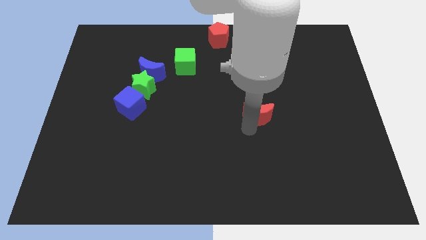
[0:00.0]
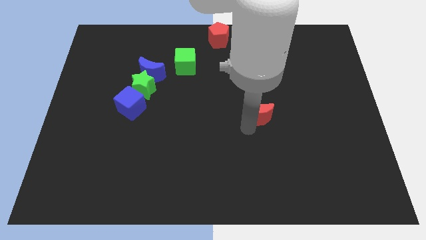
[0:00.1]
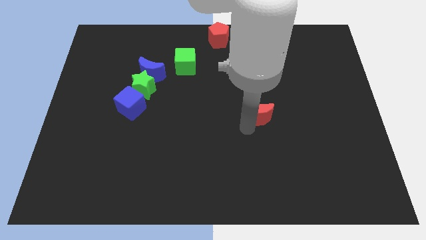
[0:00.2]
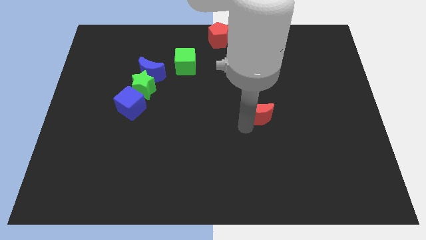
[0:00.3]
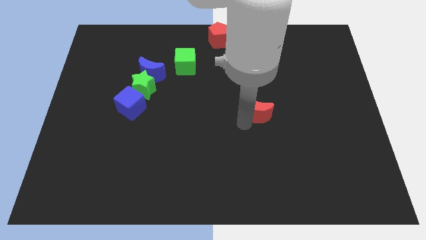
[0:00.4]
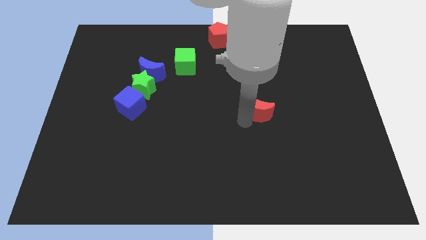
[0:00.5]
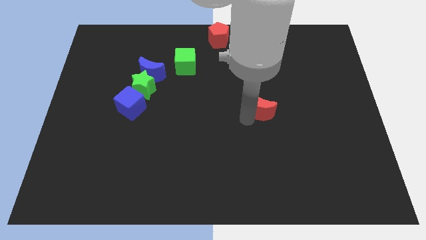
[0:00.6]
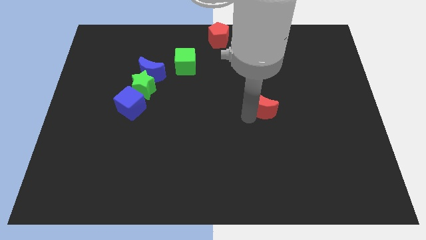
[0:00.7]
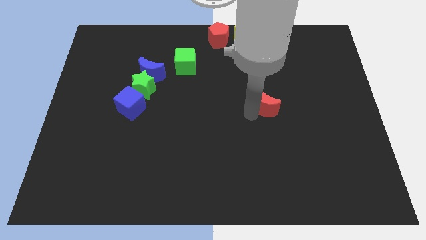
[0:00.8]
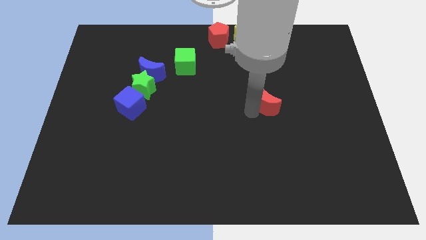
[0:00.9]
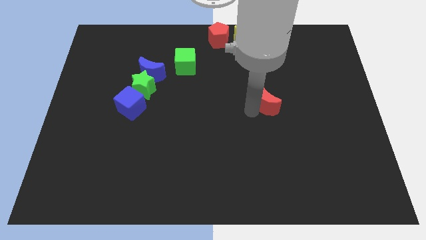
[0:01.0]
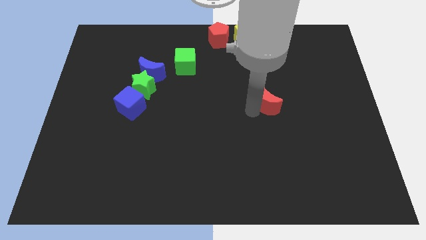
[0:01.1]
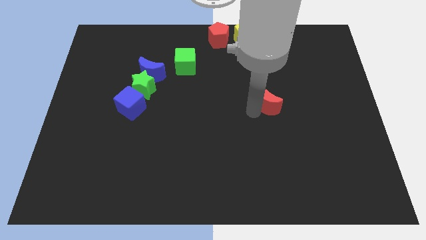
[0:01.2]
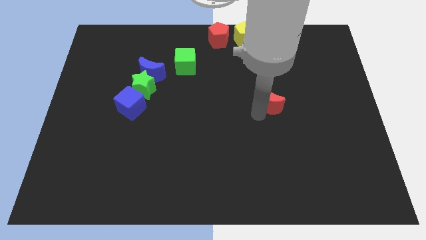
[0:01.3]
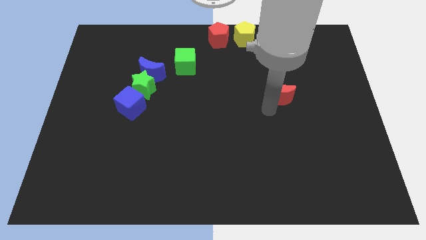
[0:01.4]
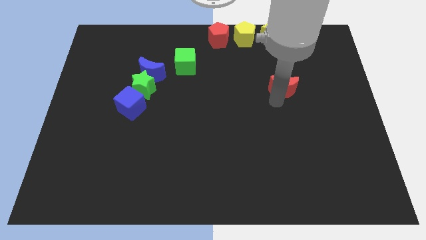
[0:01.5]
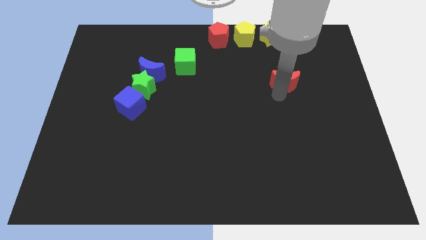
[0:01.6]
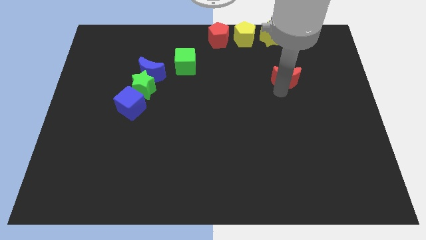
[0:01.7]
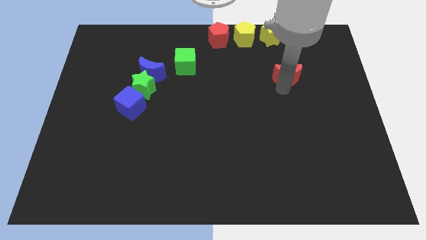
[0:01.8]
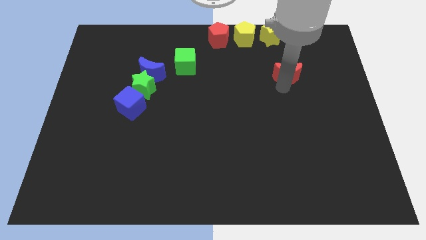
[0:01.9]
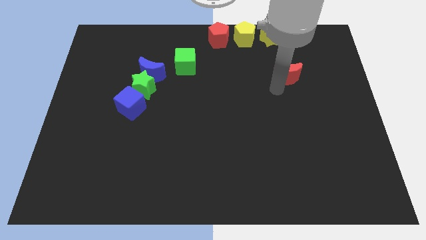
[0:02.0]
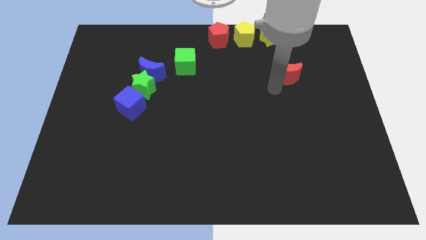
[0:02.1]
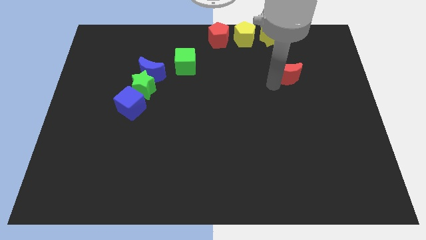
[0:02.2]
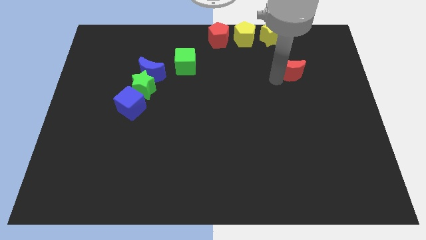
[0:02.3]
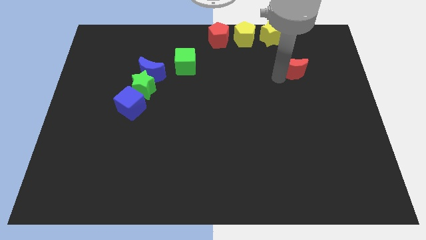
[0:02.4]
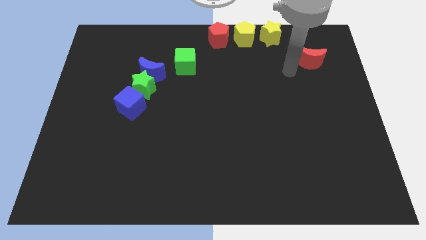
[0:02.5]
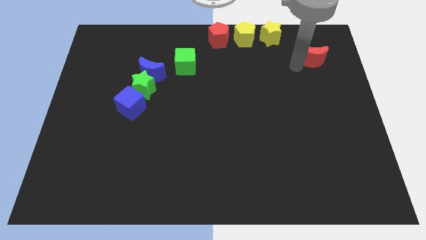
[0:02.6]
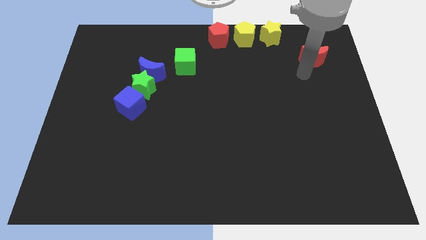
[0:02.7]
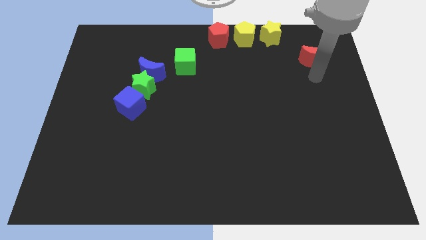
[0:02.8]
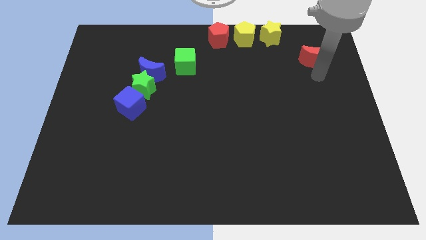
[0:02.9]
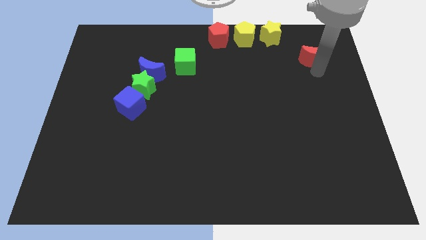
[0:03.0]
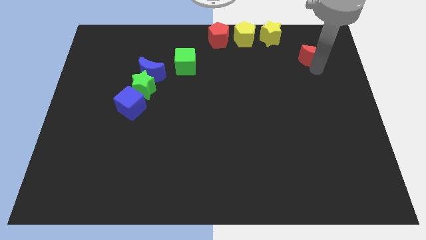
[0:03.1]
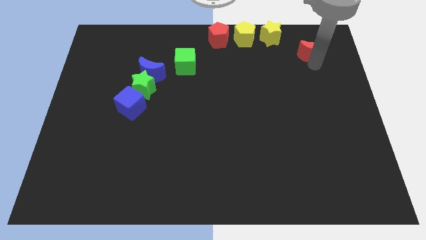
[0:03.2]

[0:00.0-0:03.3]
slide the red moon towards the top right side of the board

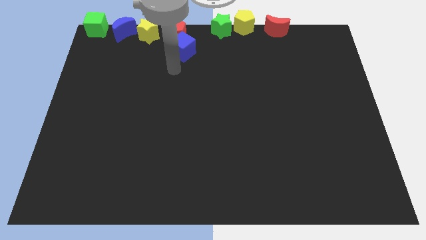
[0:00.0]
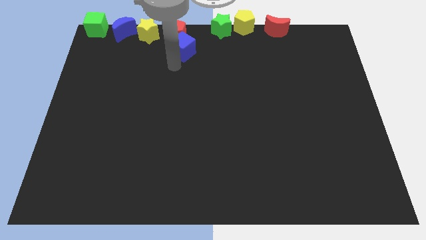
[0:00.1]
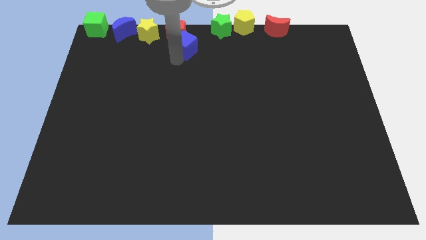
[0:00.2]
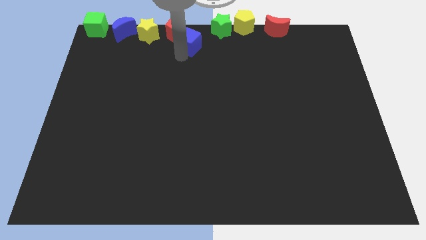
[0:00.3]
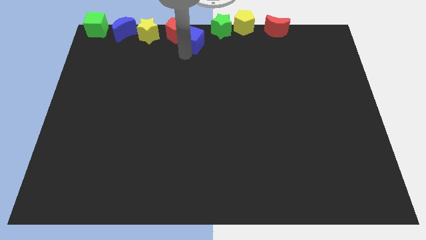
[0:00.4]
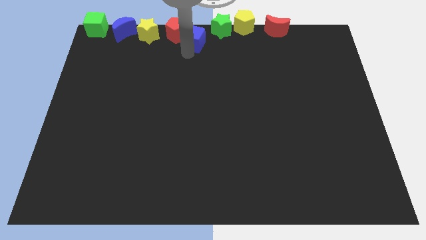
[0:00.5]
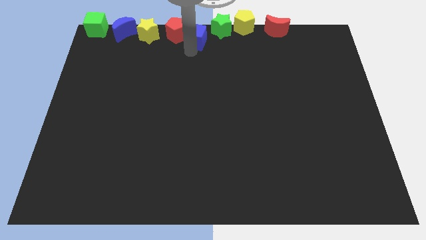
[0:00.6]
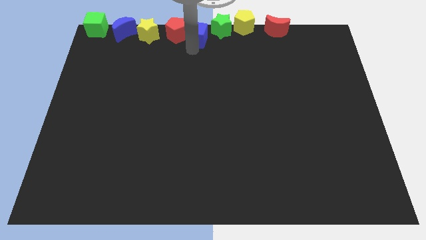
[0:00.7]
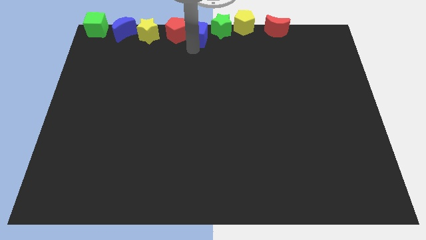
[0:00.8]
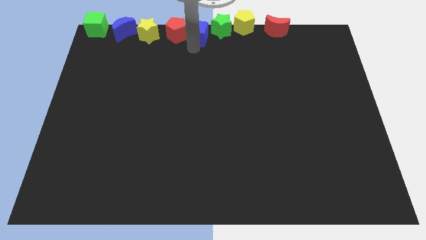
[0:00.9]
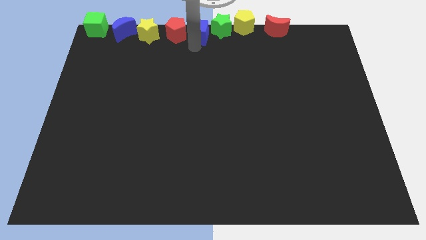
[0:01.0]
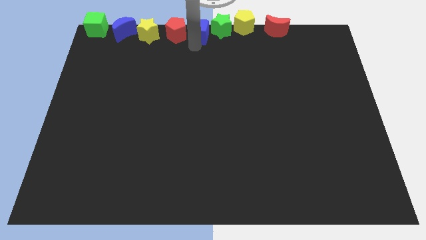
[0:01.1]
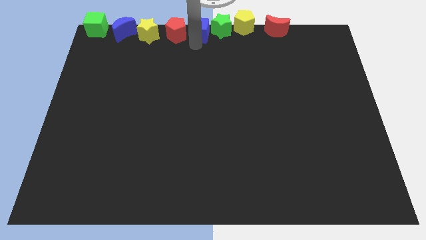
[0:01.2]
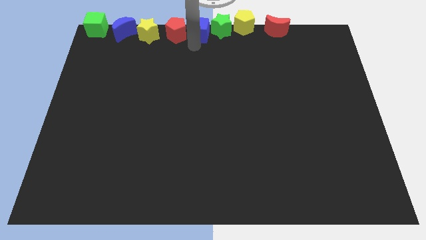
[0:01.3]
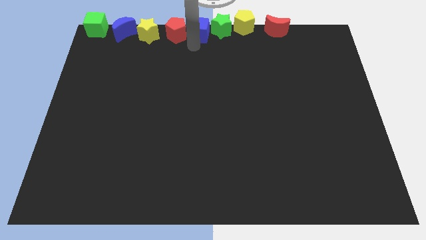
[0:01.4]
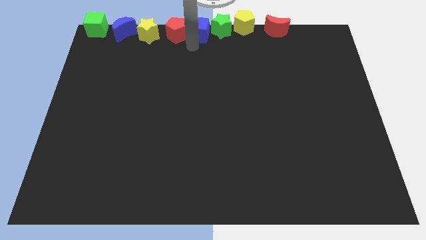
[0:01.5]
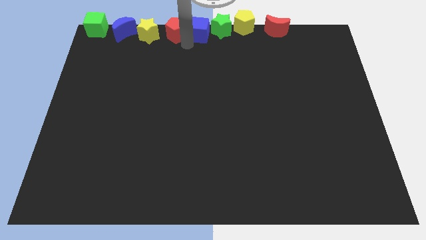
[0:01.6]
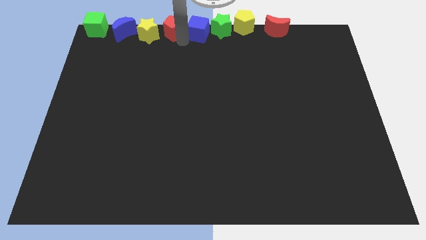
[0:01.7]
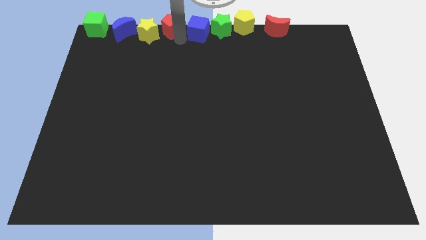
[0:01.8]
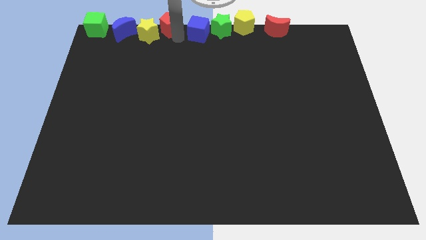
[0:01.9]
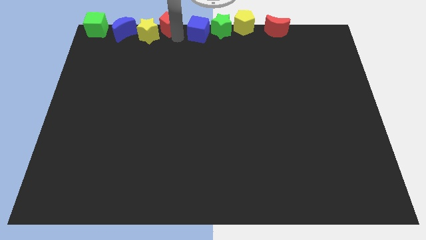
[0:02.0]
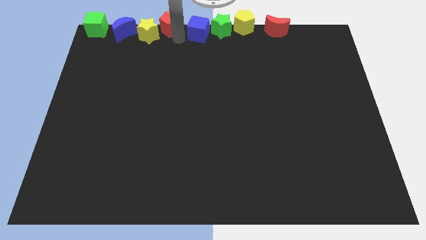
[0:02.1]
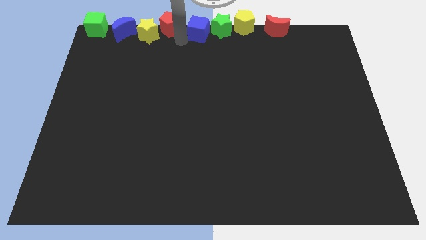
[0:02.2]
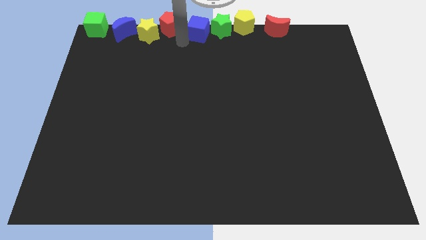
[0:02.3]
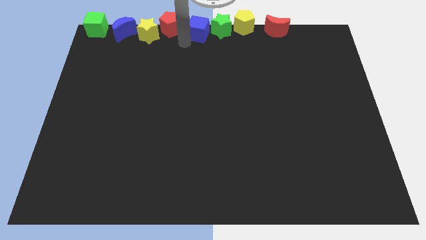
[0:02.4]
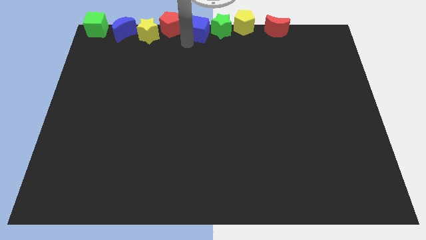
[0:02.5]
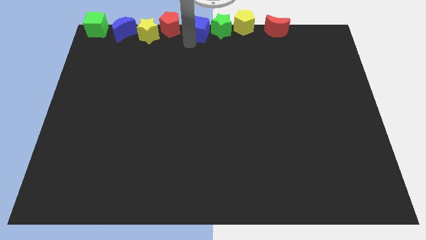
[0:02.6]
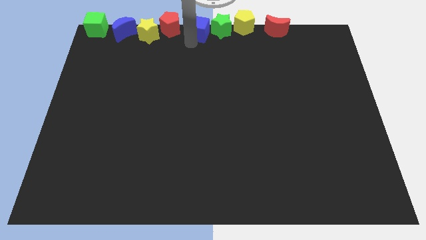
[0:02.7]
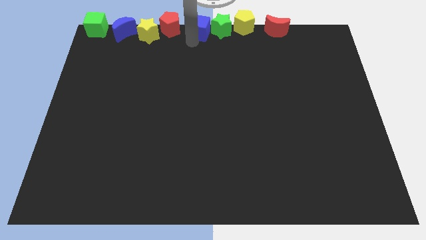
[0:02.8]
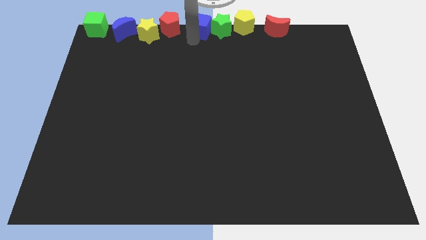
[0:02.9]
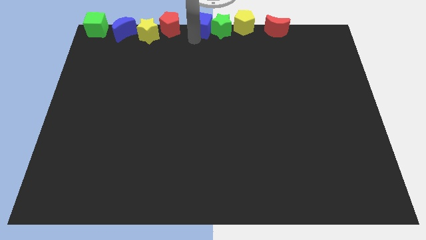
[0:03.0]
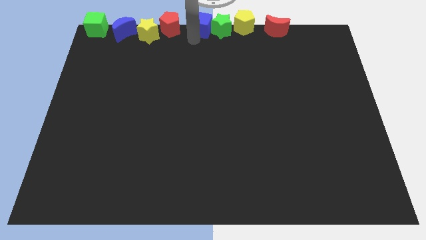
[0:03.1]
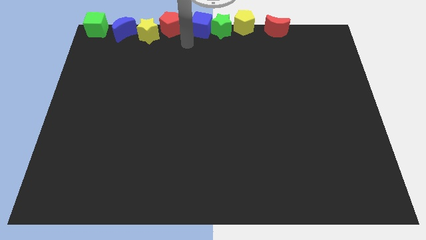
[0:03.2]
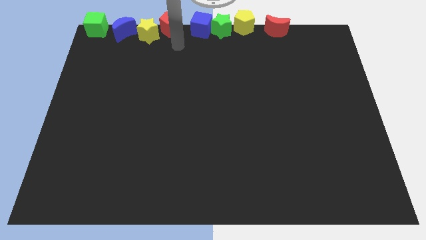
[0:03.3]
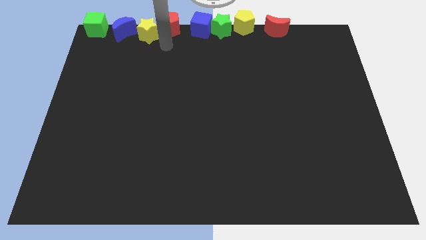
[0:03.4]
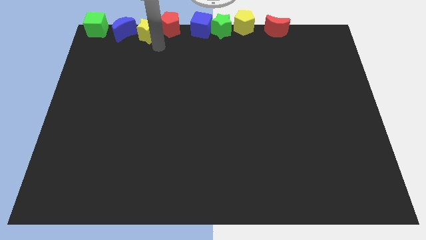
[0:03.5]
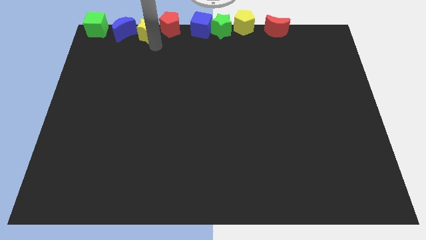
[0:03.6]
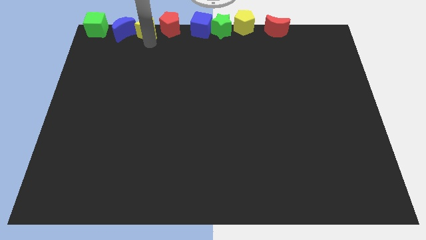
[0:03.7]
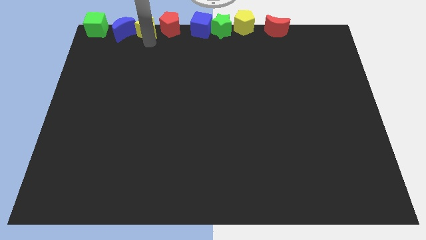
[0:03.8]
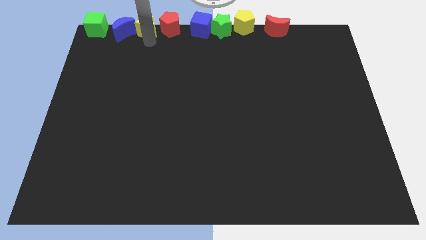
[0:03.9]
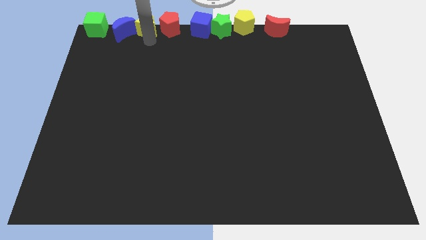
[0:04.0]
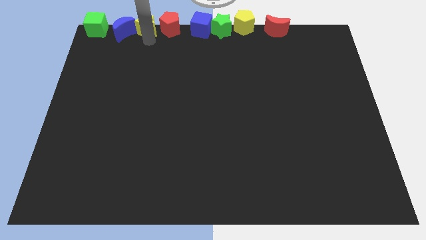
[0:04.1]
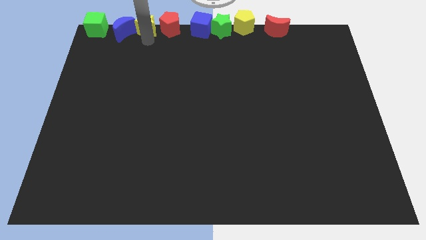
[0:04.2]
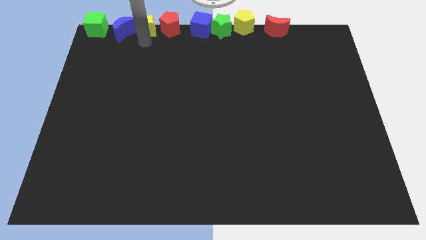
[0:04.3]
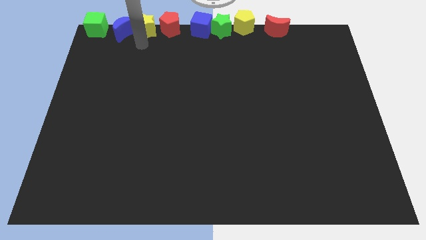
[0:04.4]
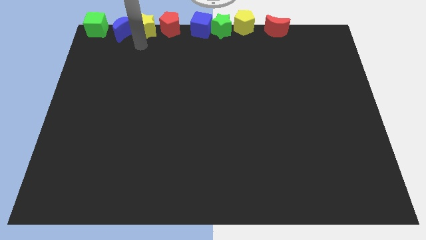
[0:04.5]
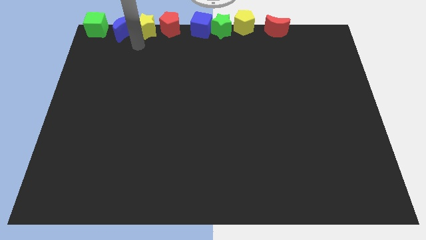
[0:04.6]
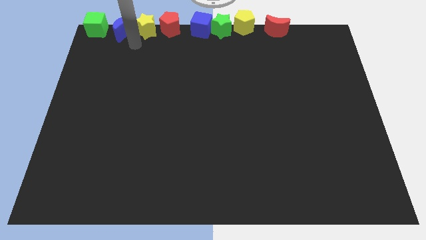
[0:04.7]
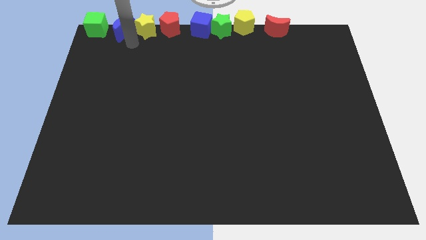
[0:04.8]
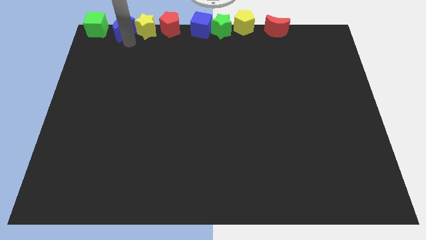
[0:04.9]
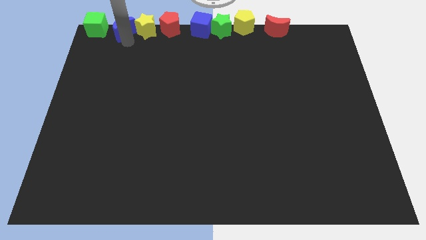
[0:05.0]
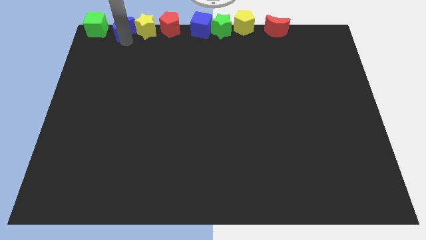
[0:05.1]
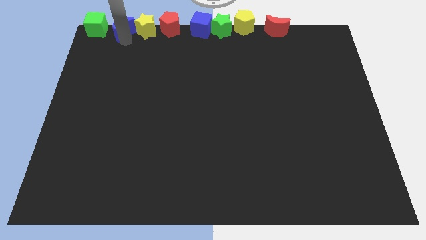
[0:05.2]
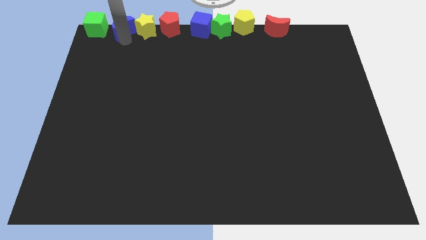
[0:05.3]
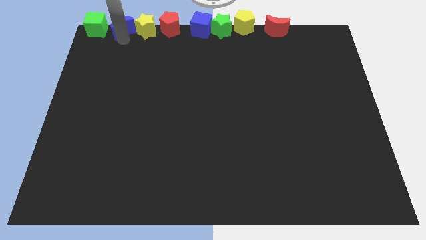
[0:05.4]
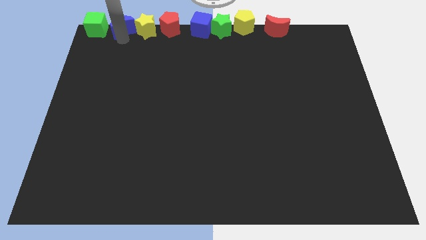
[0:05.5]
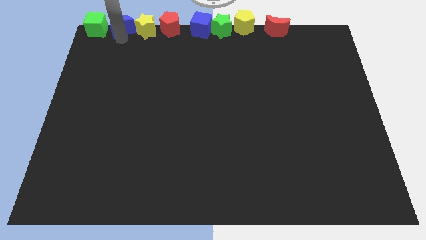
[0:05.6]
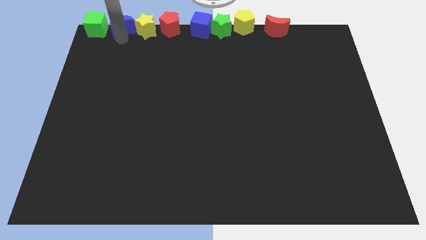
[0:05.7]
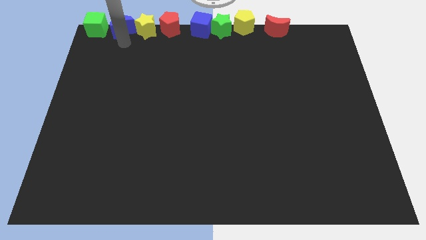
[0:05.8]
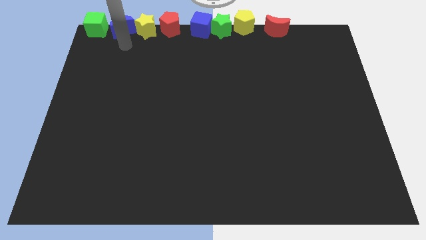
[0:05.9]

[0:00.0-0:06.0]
line the blocks up horizontally
